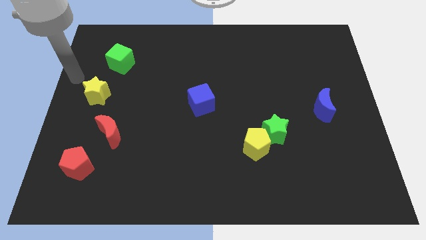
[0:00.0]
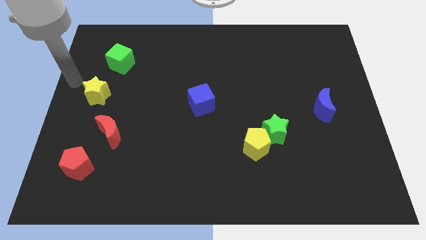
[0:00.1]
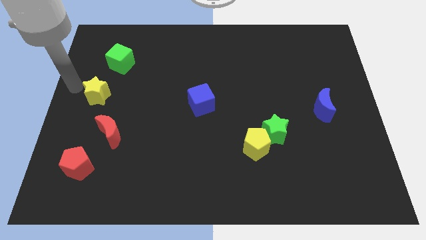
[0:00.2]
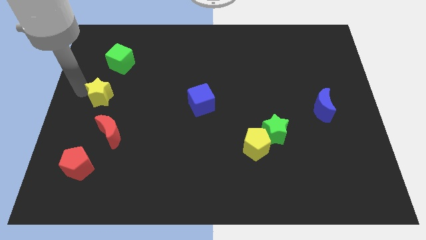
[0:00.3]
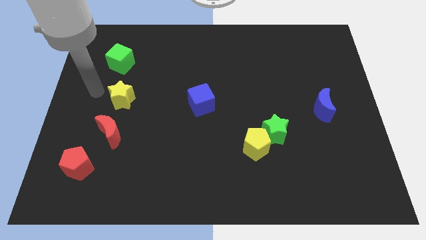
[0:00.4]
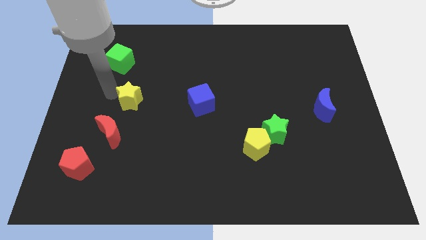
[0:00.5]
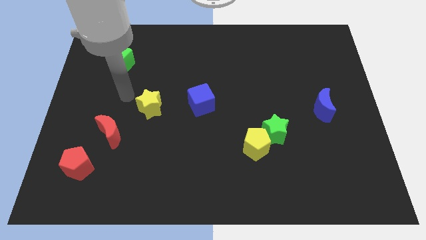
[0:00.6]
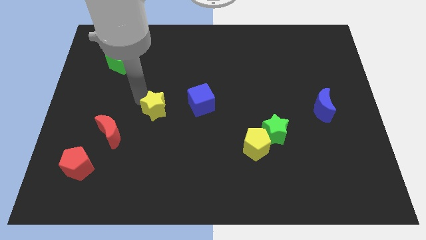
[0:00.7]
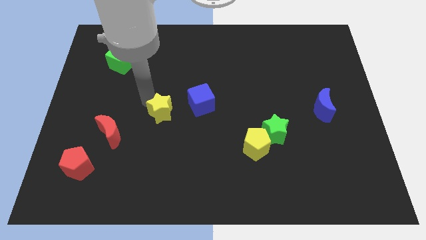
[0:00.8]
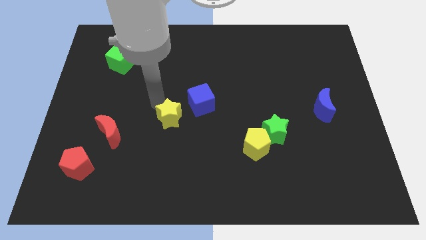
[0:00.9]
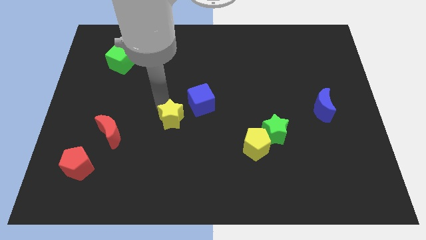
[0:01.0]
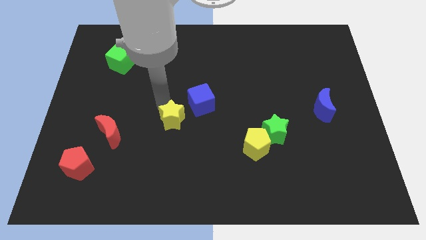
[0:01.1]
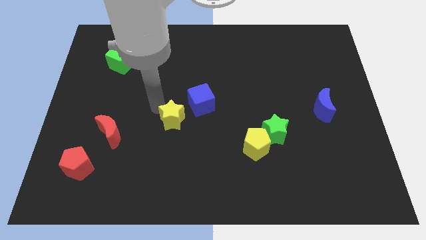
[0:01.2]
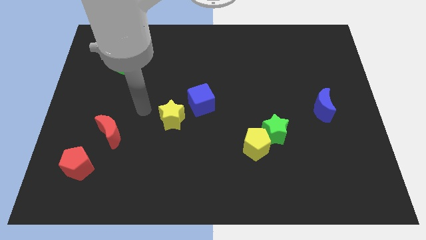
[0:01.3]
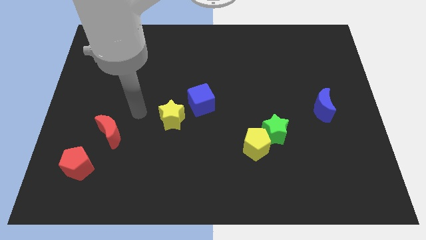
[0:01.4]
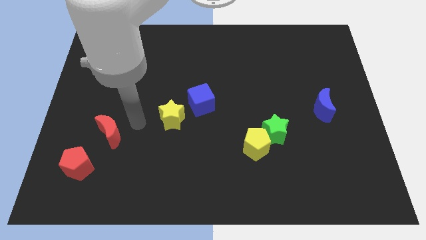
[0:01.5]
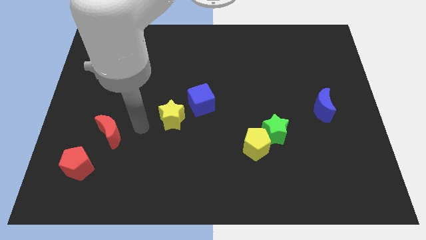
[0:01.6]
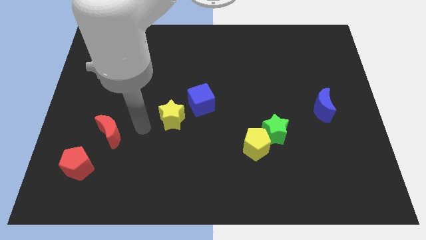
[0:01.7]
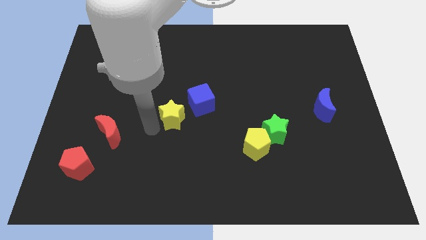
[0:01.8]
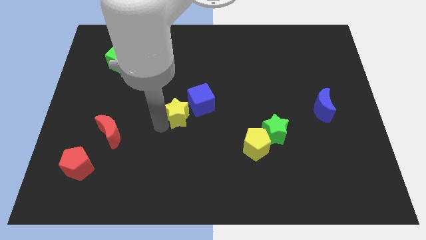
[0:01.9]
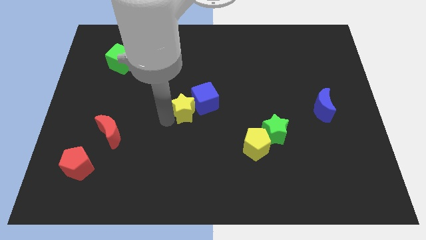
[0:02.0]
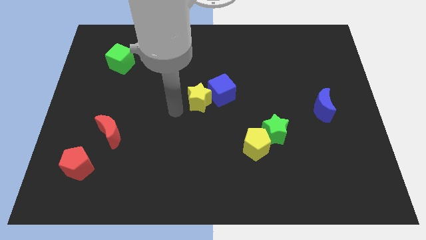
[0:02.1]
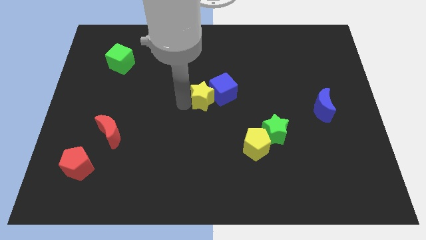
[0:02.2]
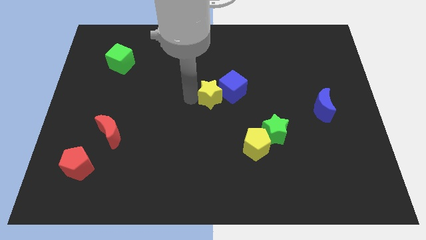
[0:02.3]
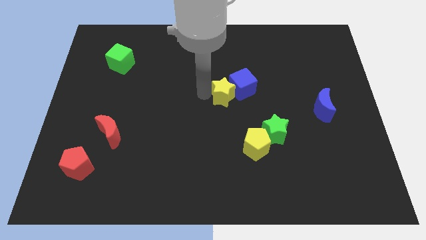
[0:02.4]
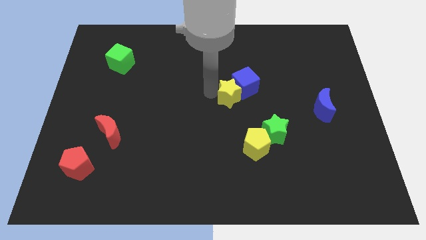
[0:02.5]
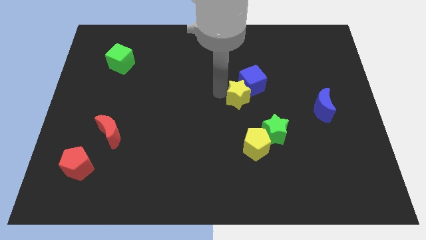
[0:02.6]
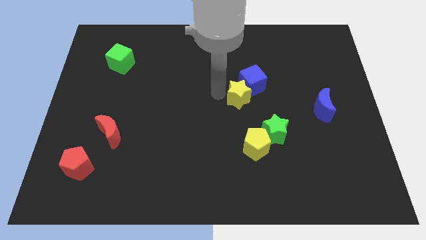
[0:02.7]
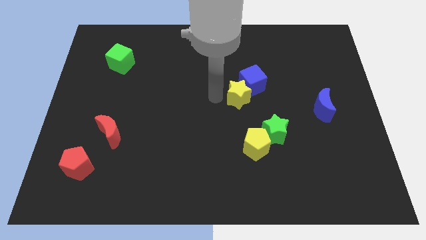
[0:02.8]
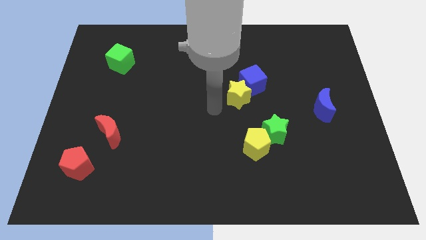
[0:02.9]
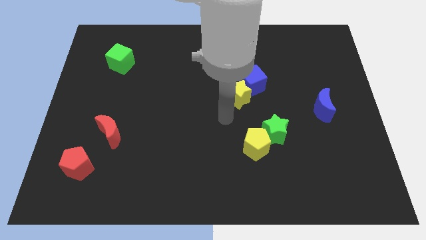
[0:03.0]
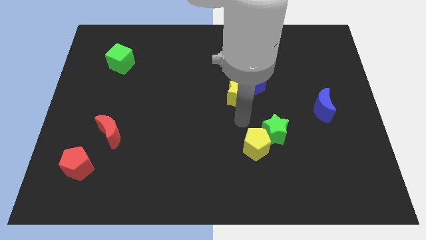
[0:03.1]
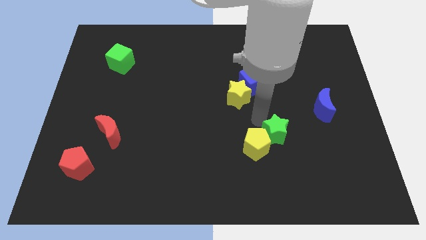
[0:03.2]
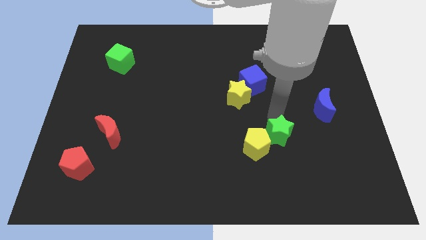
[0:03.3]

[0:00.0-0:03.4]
push the yellow star and blue cube to the top side of the yellow pentagon

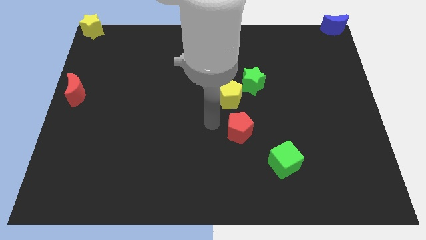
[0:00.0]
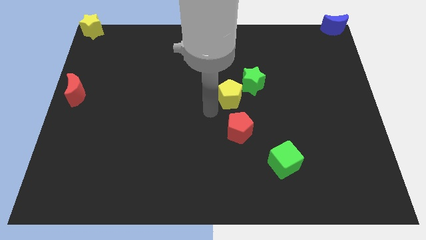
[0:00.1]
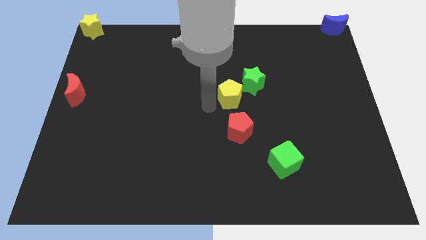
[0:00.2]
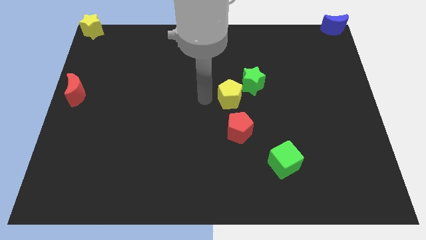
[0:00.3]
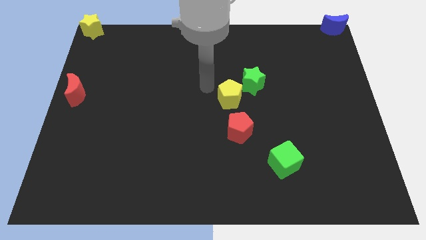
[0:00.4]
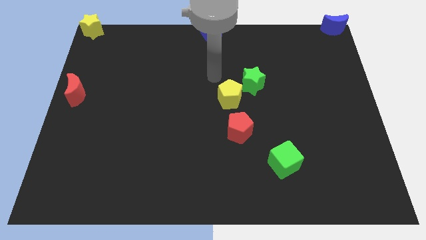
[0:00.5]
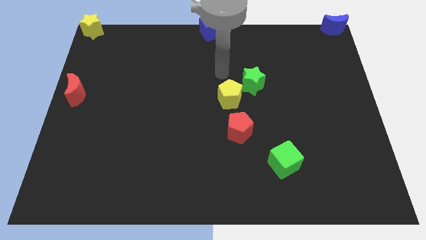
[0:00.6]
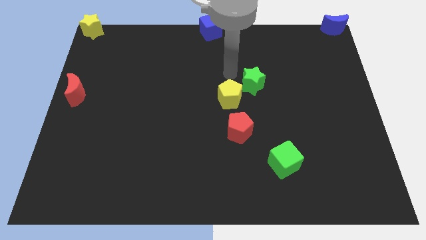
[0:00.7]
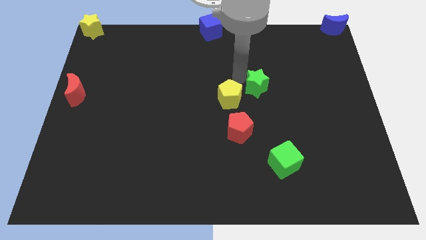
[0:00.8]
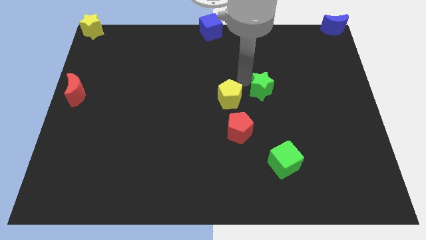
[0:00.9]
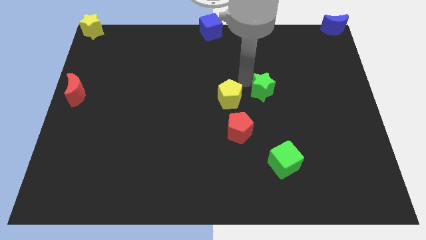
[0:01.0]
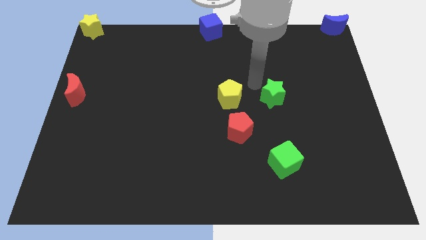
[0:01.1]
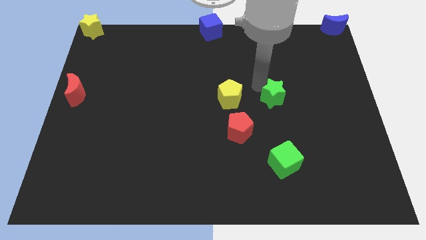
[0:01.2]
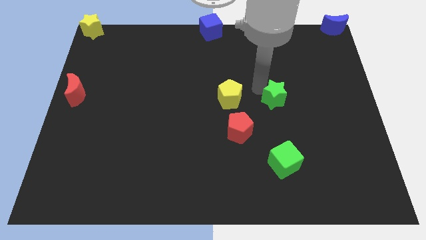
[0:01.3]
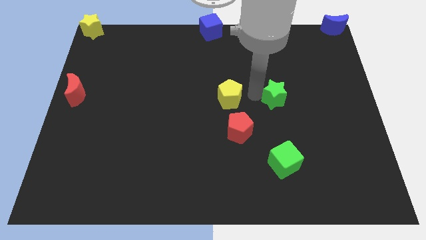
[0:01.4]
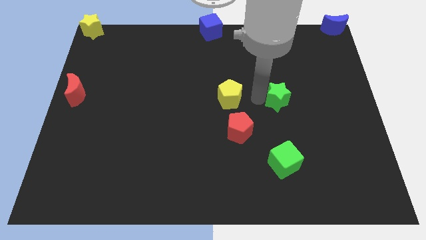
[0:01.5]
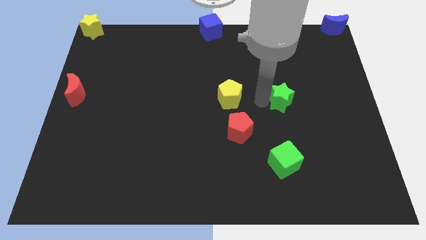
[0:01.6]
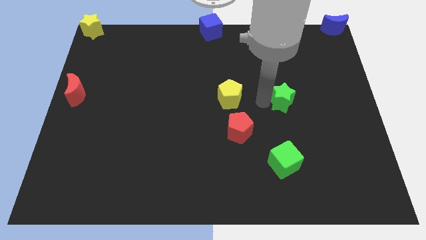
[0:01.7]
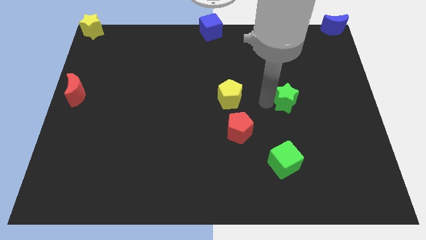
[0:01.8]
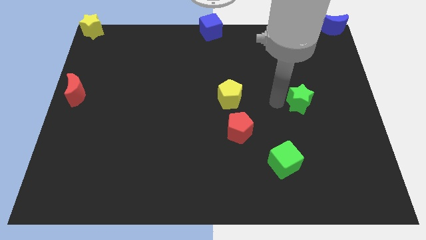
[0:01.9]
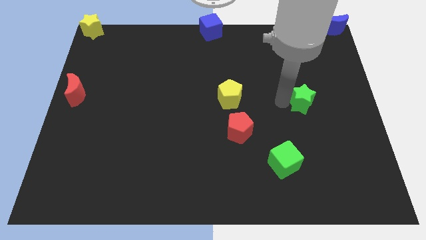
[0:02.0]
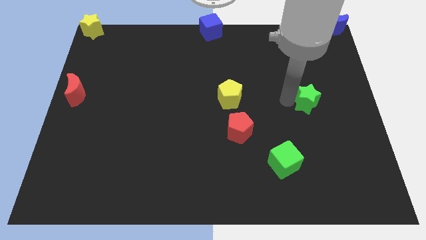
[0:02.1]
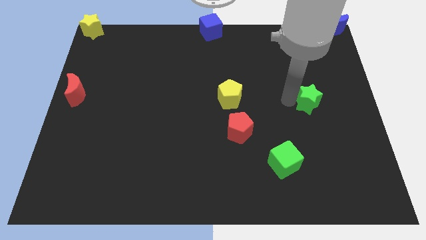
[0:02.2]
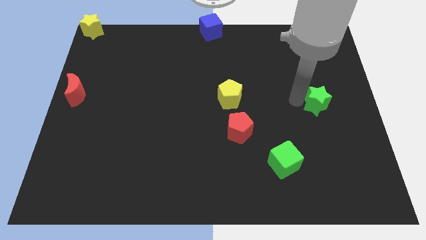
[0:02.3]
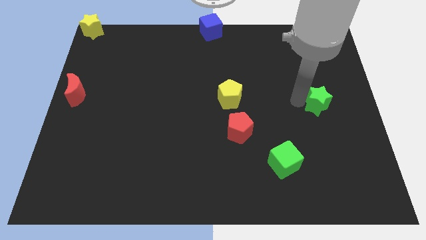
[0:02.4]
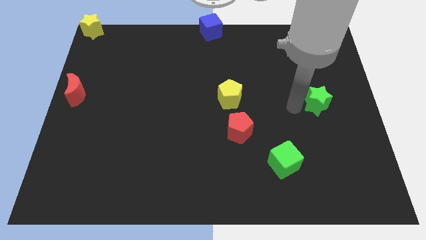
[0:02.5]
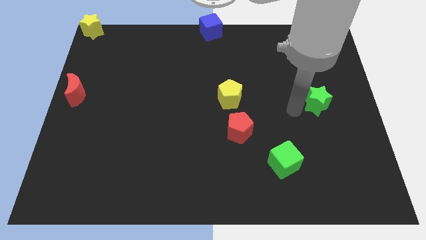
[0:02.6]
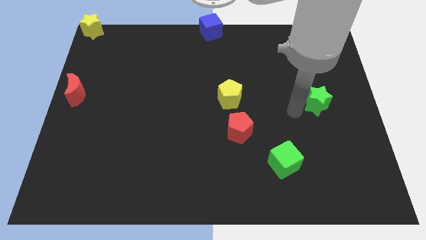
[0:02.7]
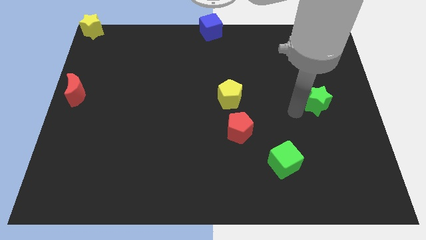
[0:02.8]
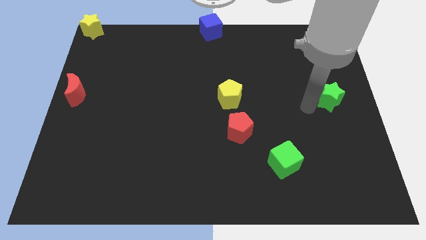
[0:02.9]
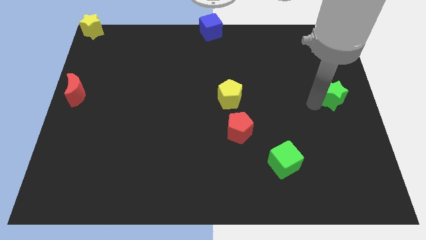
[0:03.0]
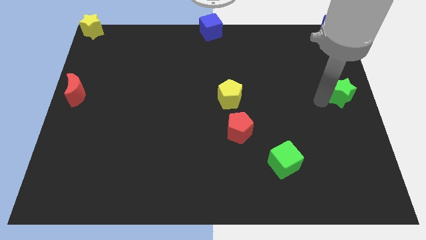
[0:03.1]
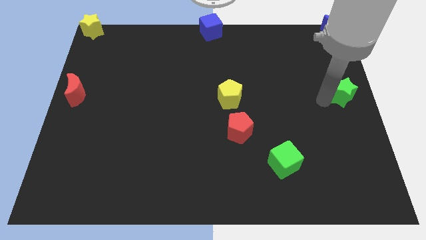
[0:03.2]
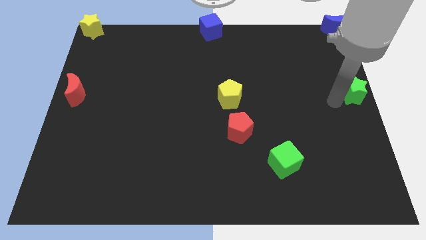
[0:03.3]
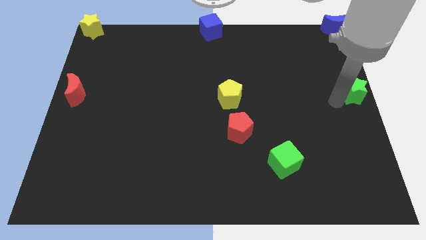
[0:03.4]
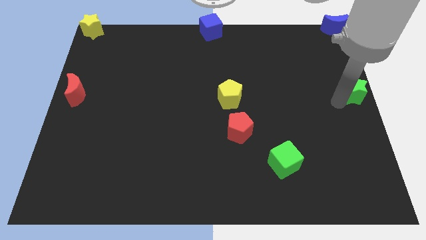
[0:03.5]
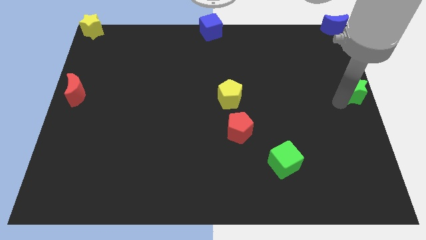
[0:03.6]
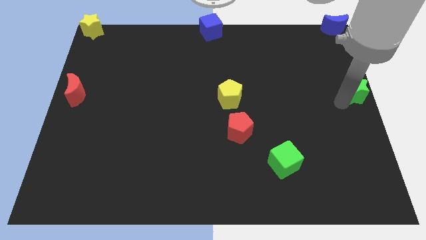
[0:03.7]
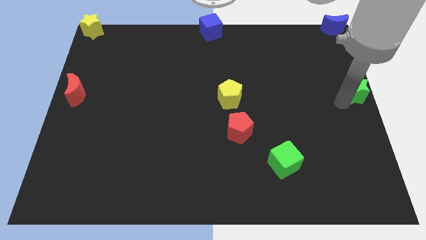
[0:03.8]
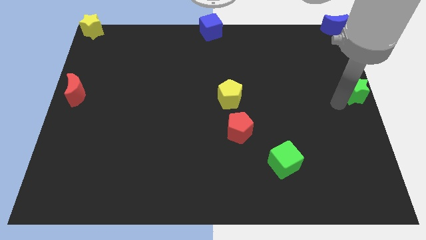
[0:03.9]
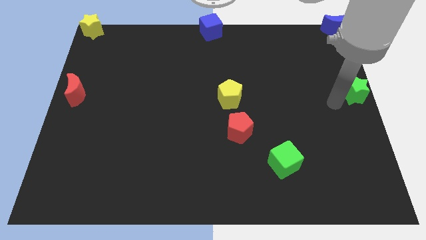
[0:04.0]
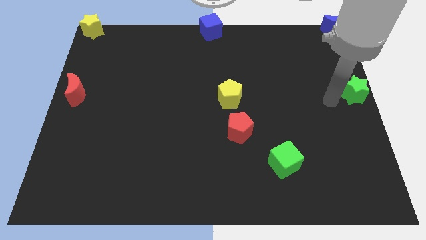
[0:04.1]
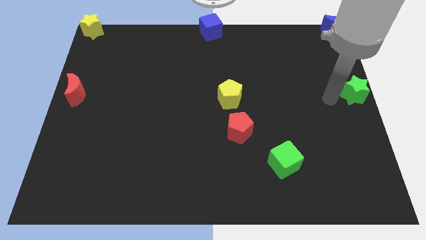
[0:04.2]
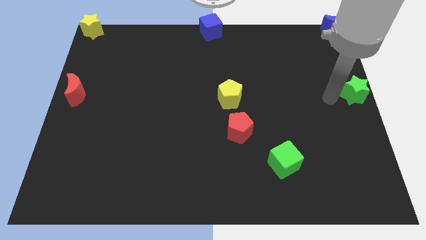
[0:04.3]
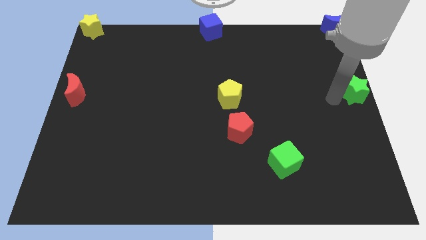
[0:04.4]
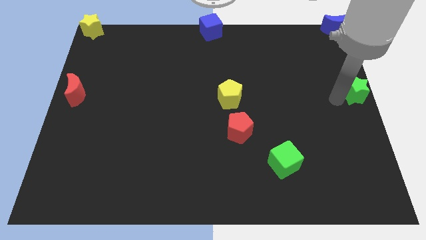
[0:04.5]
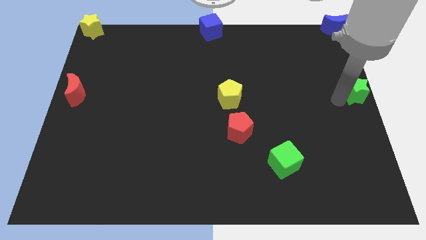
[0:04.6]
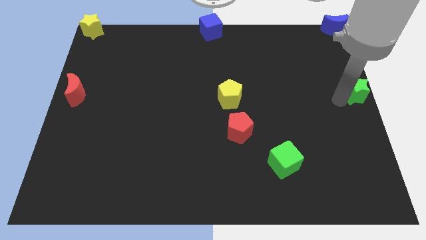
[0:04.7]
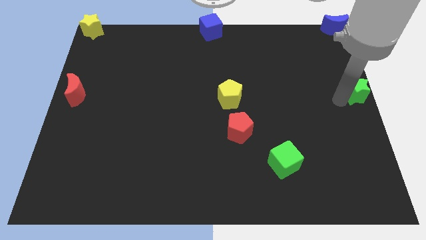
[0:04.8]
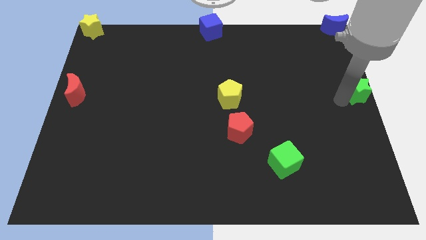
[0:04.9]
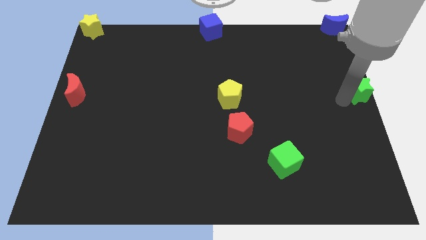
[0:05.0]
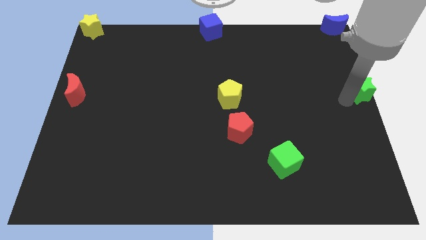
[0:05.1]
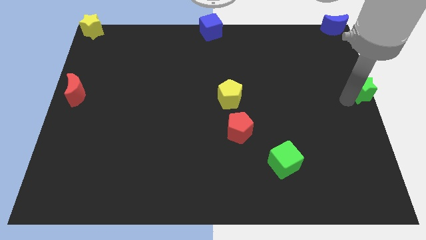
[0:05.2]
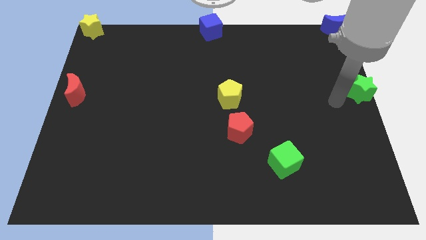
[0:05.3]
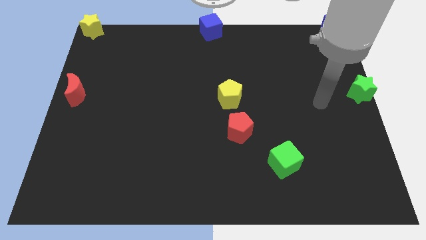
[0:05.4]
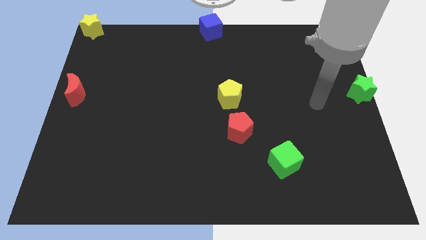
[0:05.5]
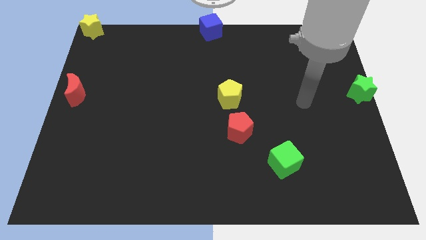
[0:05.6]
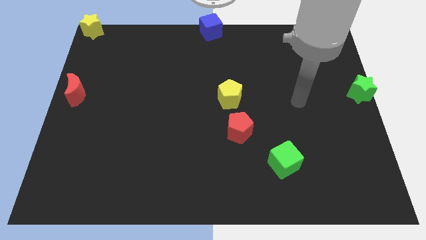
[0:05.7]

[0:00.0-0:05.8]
move the green star to the center right side of the board
